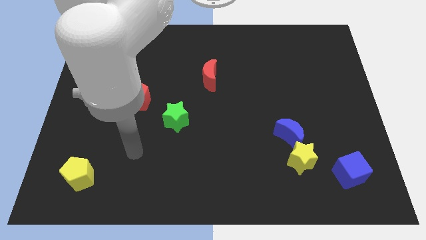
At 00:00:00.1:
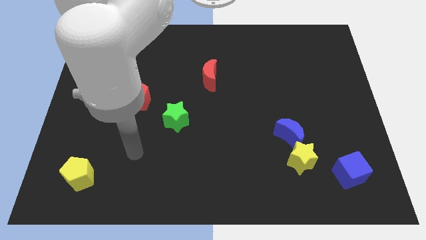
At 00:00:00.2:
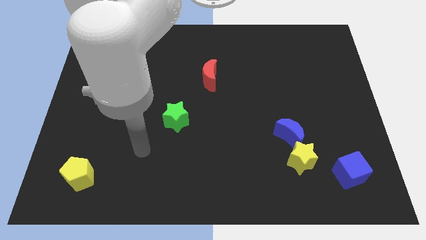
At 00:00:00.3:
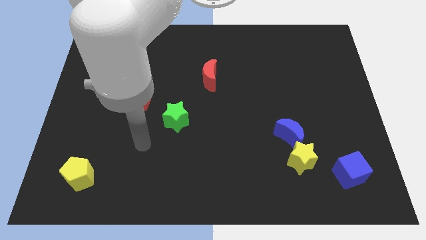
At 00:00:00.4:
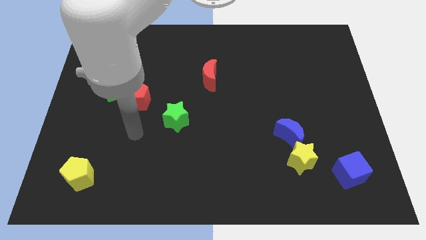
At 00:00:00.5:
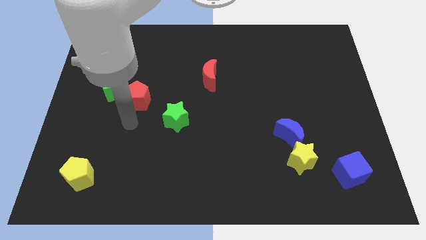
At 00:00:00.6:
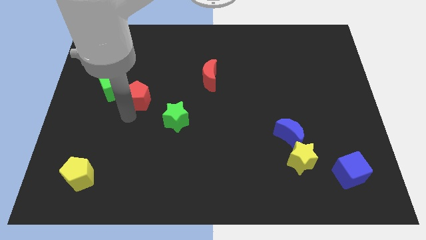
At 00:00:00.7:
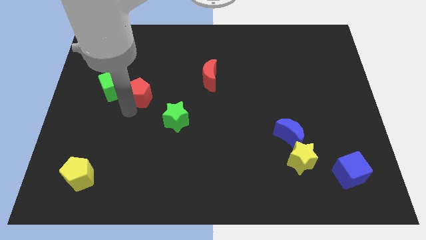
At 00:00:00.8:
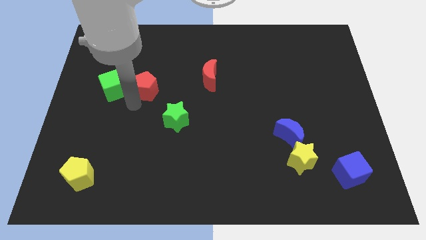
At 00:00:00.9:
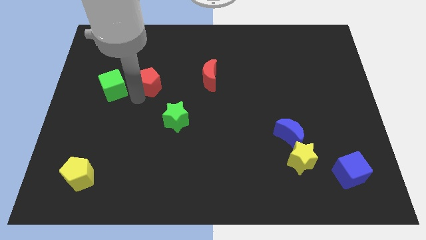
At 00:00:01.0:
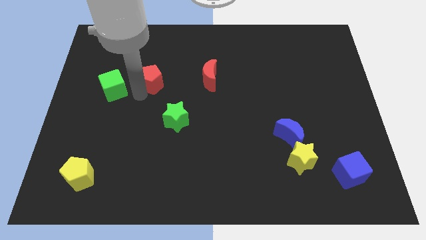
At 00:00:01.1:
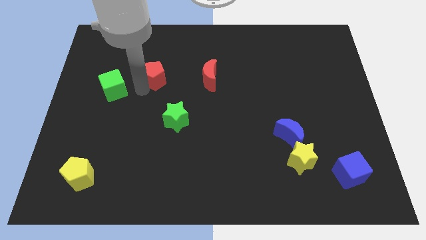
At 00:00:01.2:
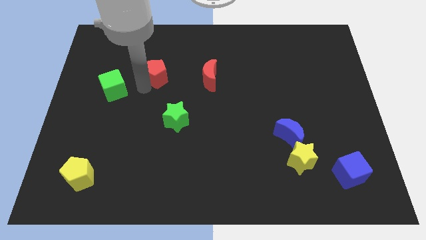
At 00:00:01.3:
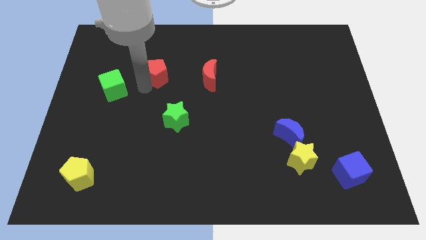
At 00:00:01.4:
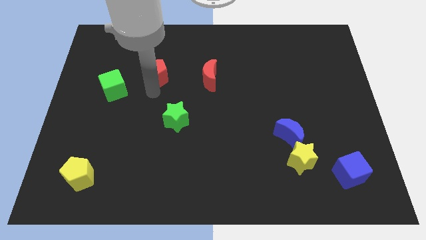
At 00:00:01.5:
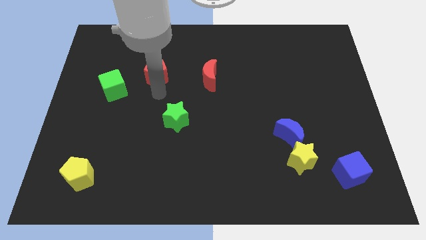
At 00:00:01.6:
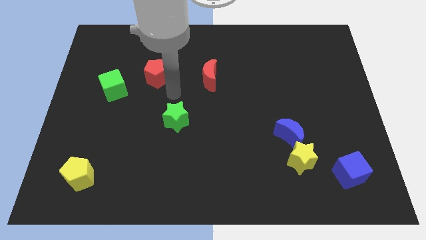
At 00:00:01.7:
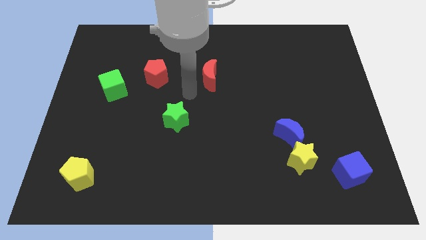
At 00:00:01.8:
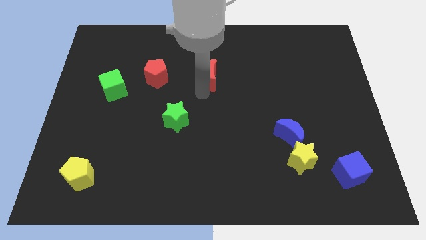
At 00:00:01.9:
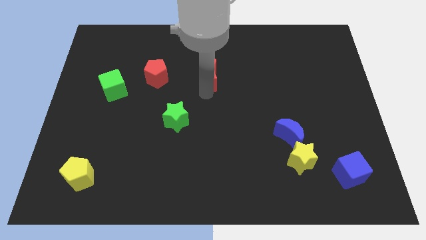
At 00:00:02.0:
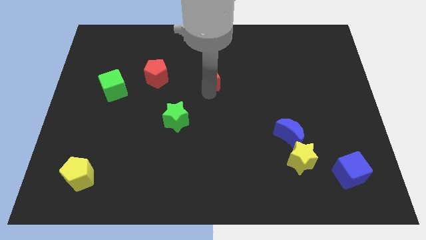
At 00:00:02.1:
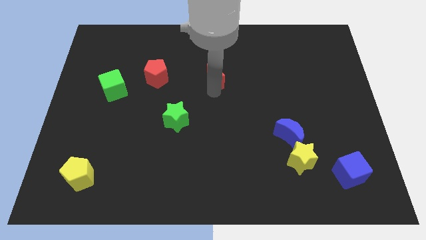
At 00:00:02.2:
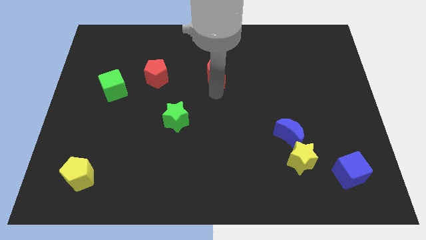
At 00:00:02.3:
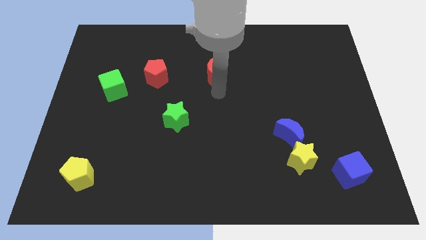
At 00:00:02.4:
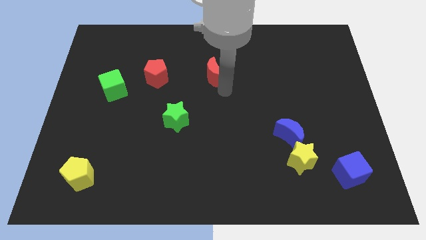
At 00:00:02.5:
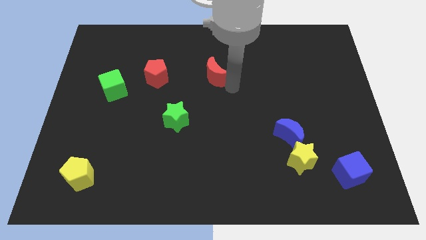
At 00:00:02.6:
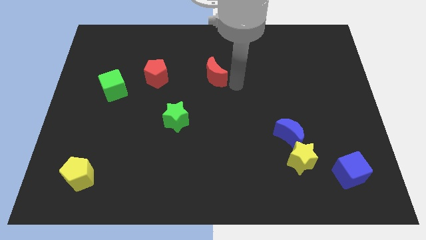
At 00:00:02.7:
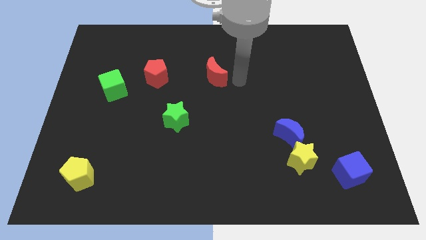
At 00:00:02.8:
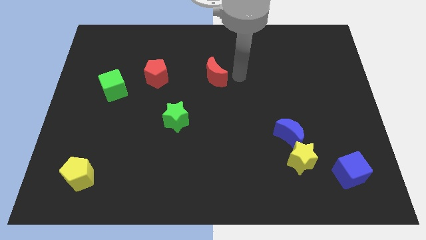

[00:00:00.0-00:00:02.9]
slide your arm towards the red moon

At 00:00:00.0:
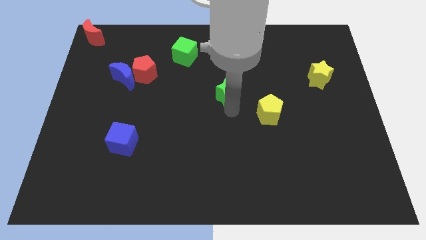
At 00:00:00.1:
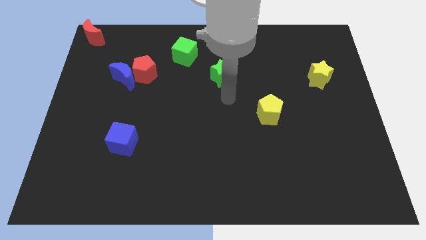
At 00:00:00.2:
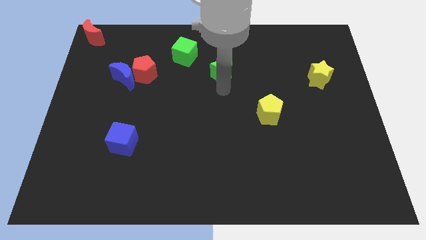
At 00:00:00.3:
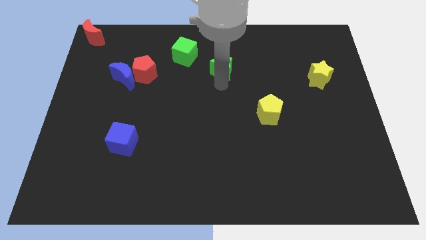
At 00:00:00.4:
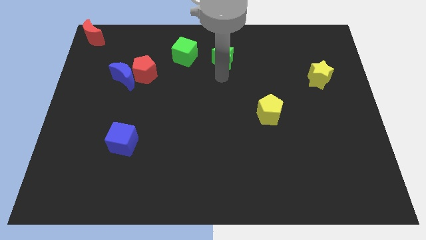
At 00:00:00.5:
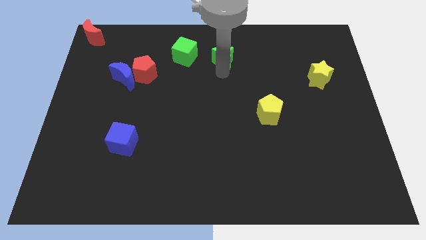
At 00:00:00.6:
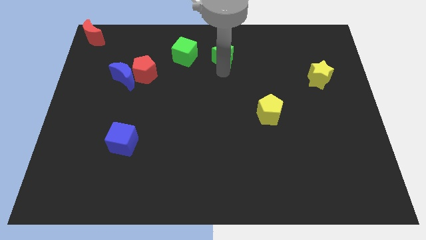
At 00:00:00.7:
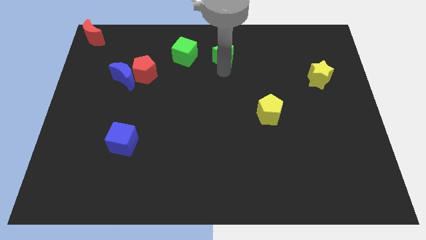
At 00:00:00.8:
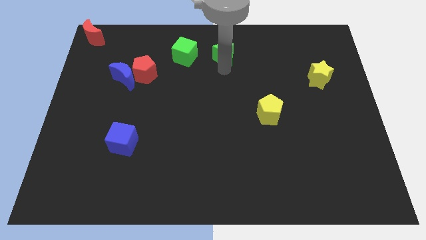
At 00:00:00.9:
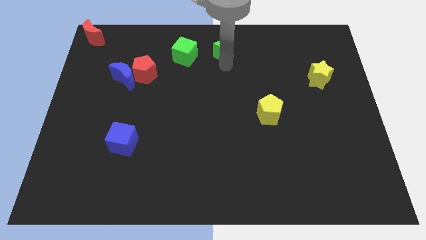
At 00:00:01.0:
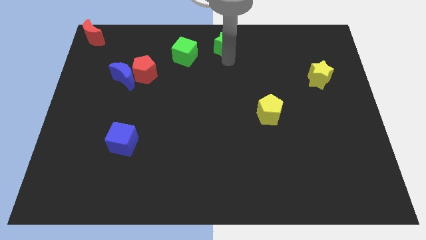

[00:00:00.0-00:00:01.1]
move green star towards top center

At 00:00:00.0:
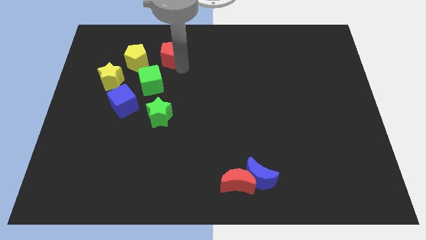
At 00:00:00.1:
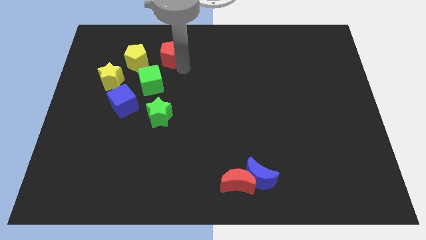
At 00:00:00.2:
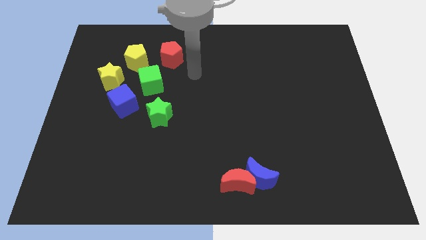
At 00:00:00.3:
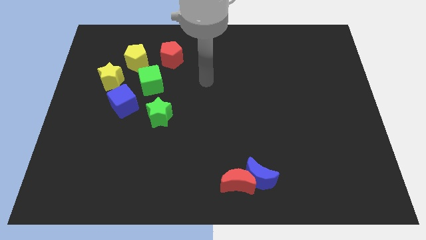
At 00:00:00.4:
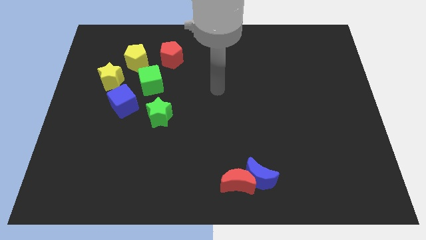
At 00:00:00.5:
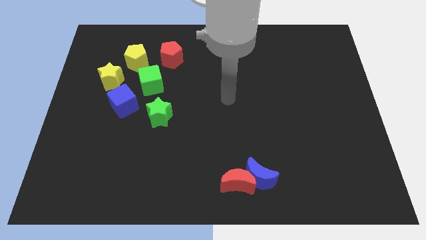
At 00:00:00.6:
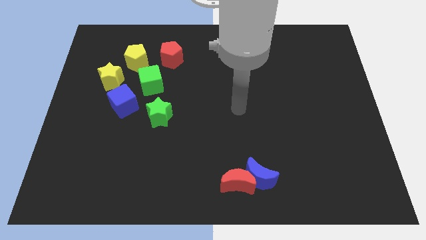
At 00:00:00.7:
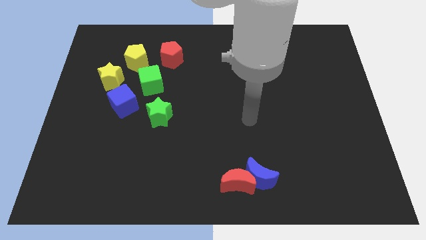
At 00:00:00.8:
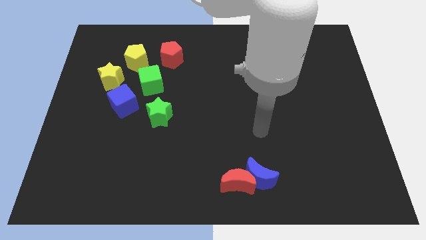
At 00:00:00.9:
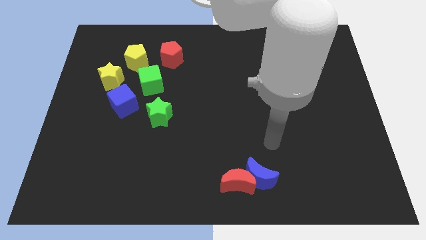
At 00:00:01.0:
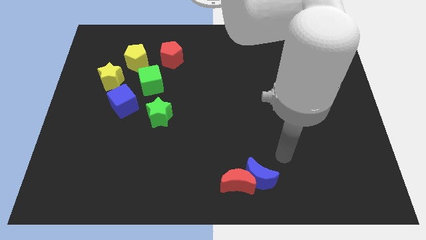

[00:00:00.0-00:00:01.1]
go away from the red pentagon

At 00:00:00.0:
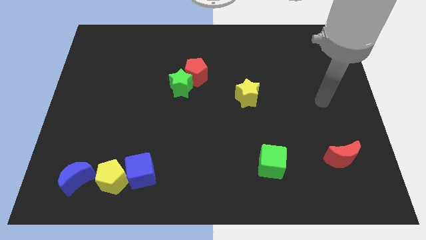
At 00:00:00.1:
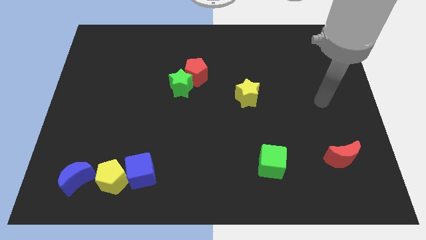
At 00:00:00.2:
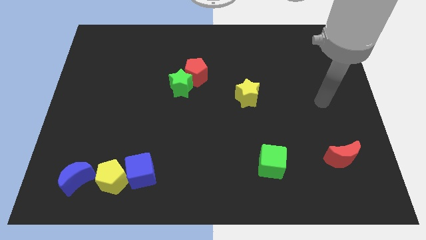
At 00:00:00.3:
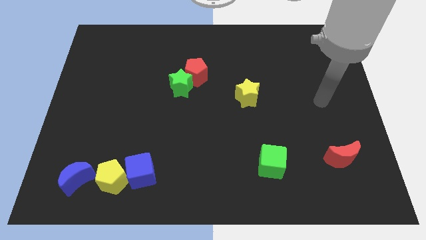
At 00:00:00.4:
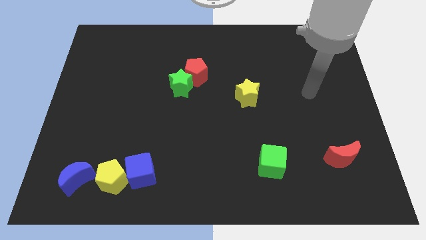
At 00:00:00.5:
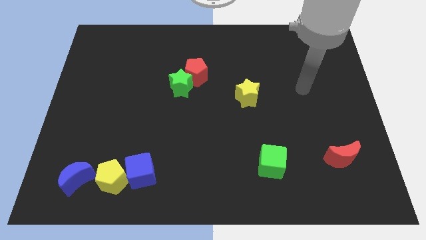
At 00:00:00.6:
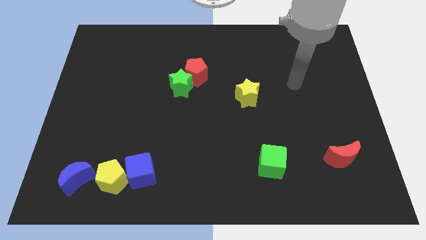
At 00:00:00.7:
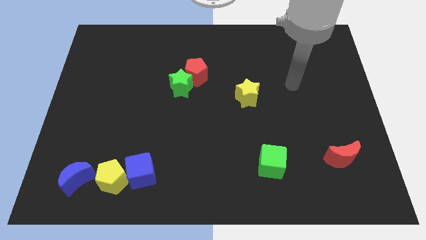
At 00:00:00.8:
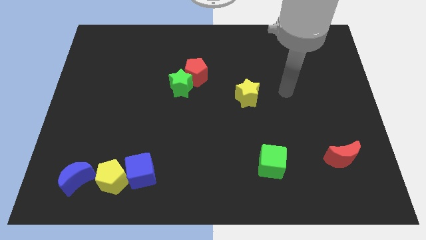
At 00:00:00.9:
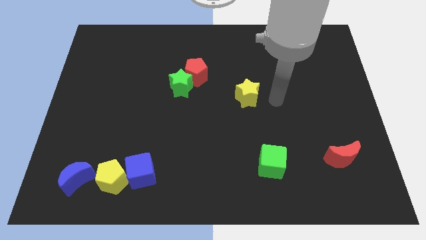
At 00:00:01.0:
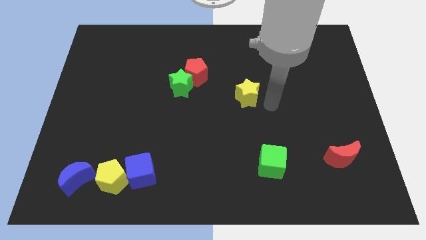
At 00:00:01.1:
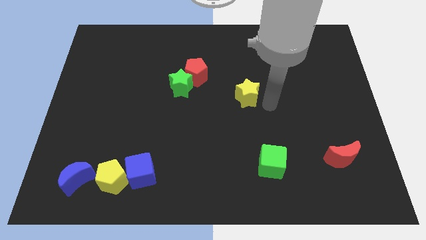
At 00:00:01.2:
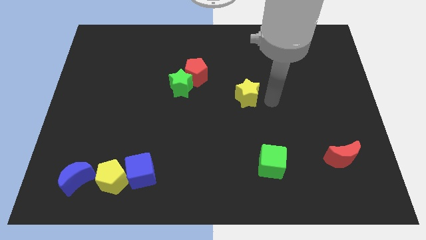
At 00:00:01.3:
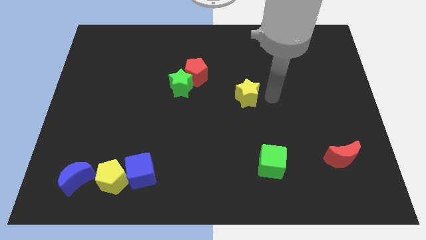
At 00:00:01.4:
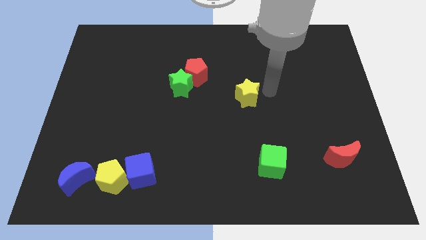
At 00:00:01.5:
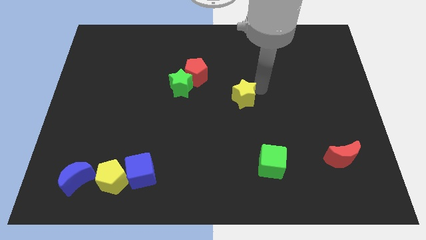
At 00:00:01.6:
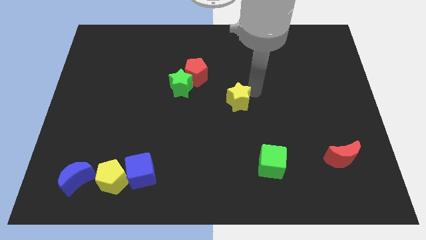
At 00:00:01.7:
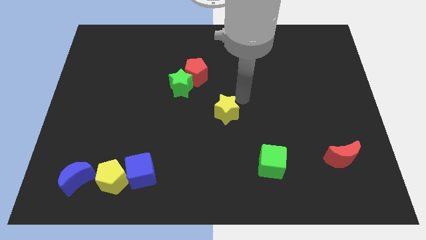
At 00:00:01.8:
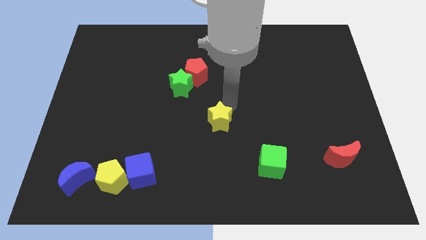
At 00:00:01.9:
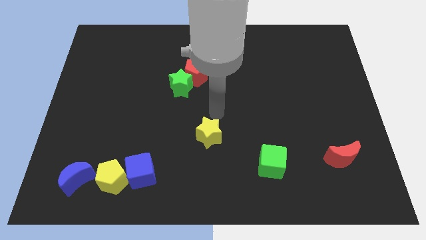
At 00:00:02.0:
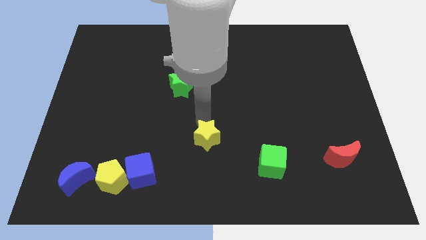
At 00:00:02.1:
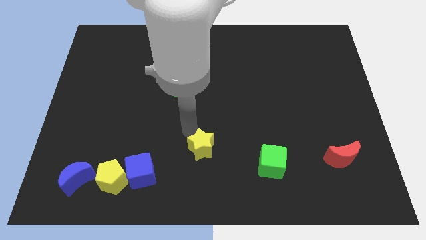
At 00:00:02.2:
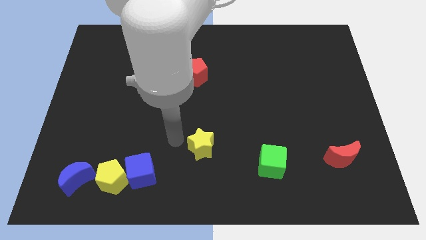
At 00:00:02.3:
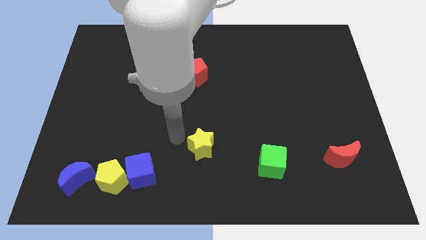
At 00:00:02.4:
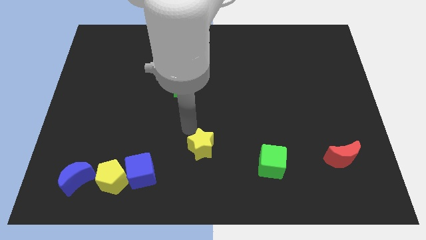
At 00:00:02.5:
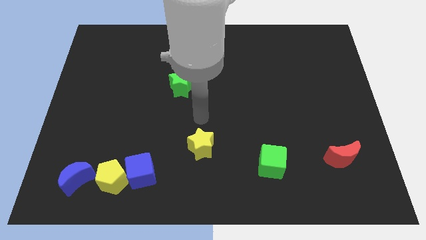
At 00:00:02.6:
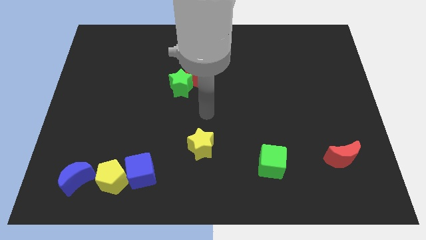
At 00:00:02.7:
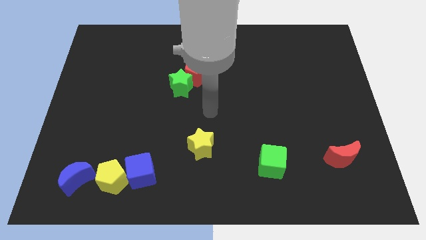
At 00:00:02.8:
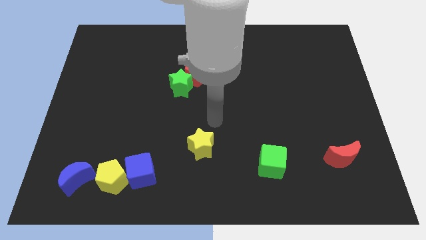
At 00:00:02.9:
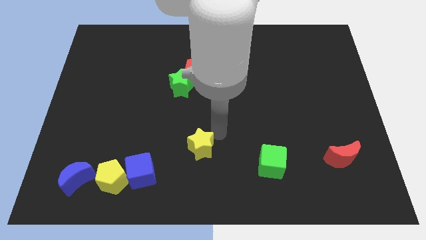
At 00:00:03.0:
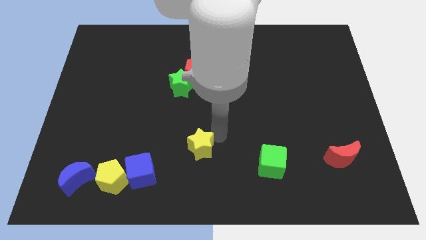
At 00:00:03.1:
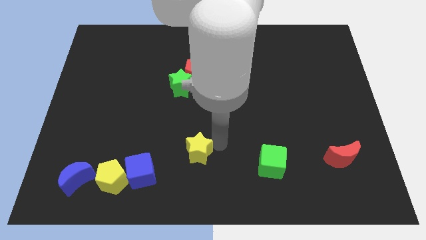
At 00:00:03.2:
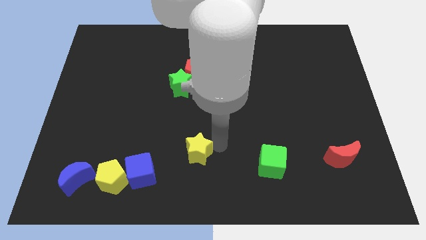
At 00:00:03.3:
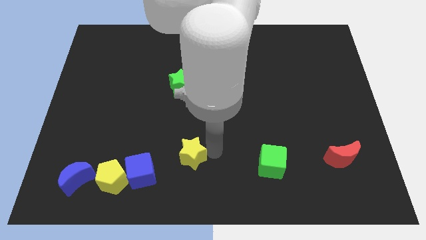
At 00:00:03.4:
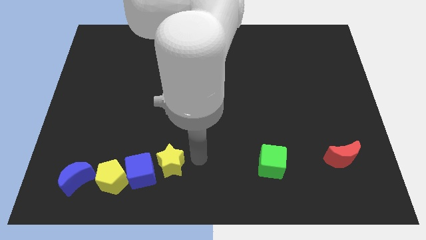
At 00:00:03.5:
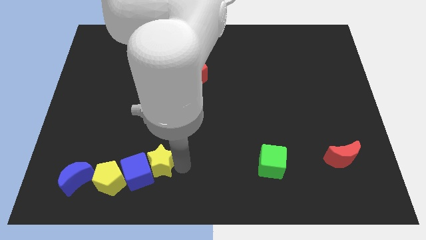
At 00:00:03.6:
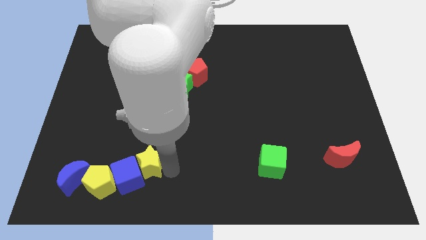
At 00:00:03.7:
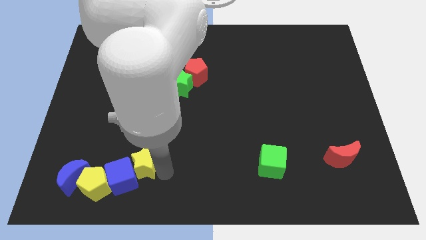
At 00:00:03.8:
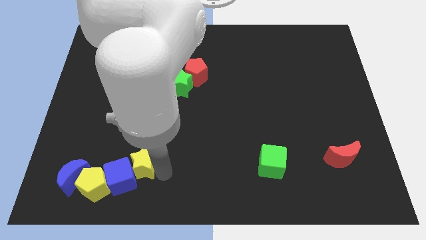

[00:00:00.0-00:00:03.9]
move the yellow star to the right of the blue cube
